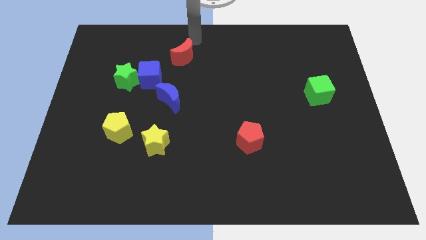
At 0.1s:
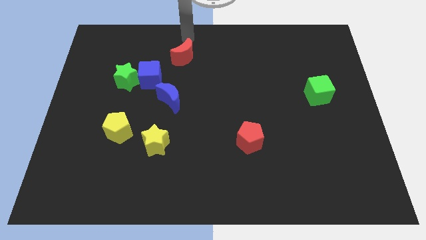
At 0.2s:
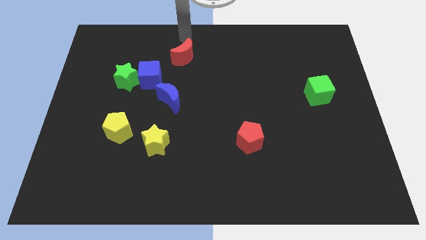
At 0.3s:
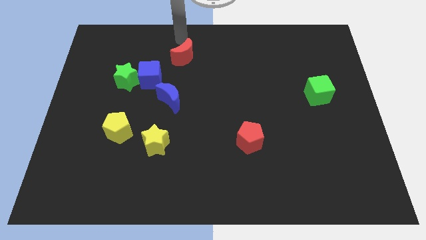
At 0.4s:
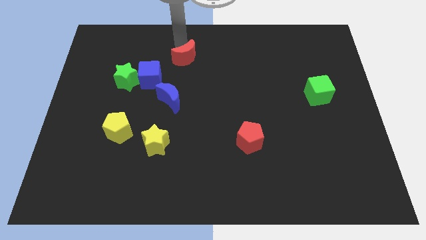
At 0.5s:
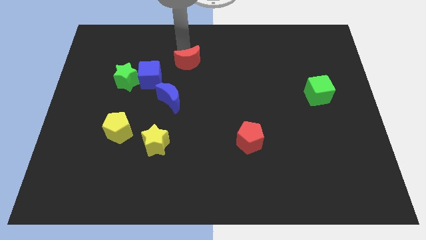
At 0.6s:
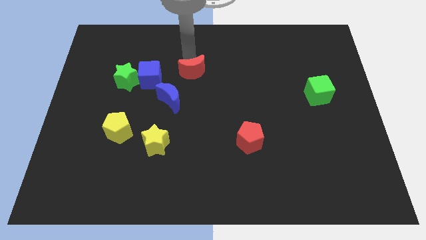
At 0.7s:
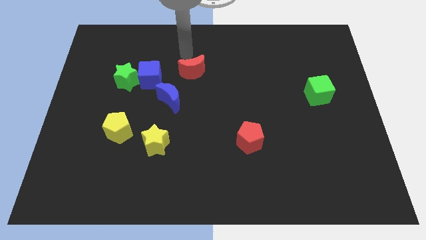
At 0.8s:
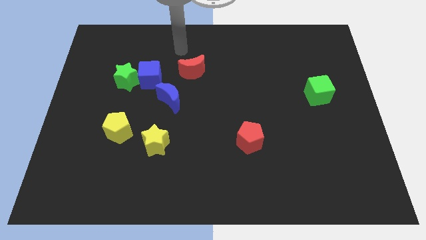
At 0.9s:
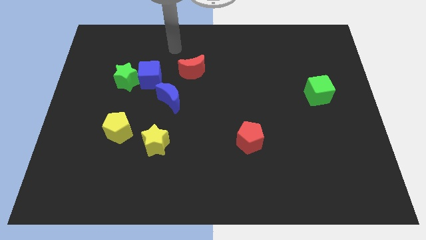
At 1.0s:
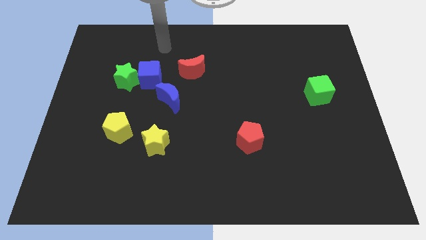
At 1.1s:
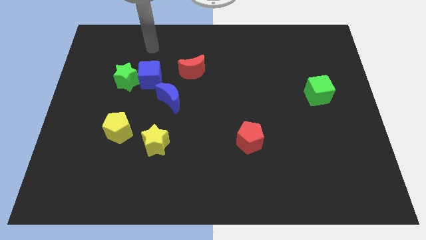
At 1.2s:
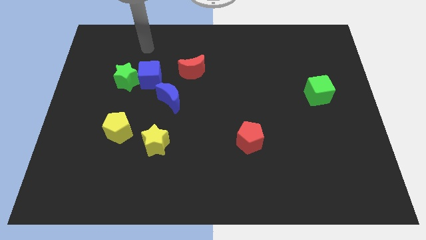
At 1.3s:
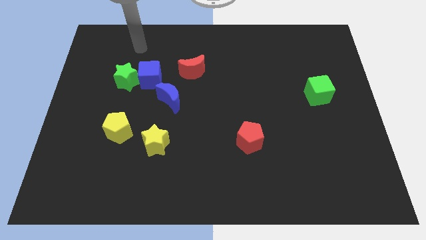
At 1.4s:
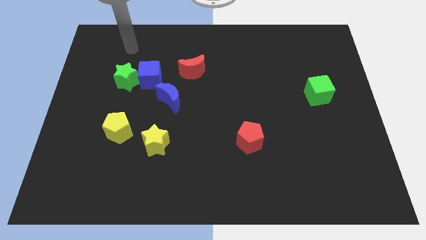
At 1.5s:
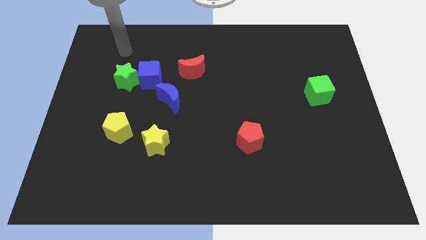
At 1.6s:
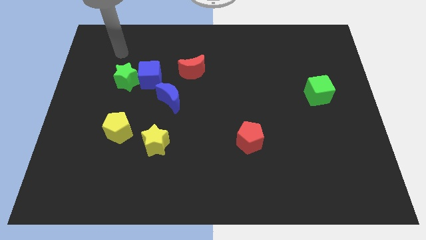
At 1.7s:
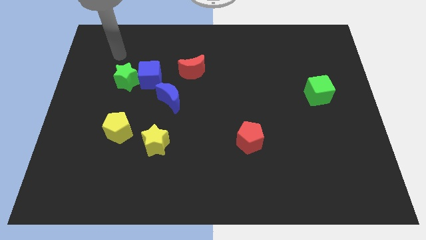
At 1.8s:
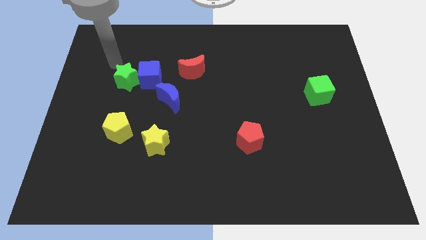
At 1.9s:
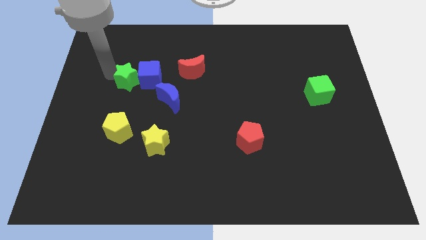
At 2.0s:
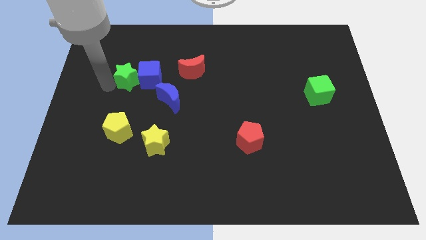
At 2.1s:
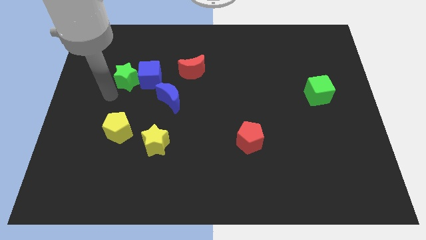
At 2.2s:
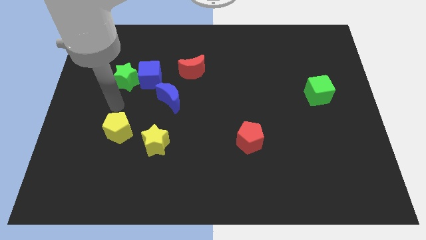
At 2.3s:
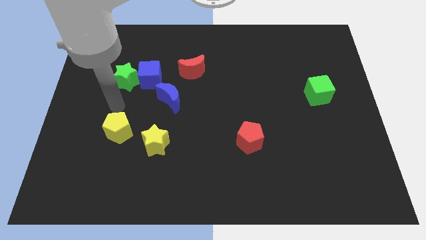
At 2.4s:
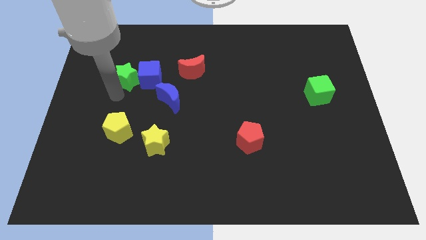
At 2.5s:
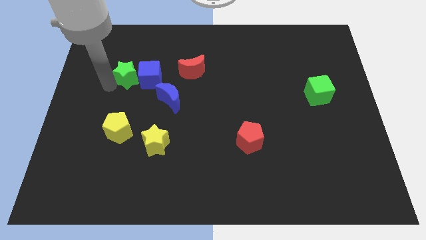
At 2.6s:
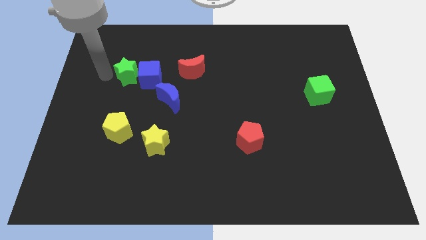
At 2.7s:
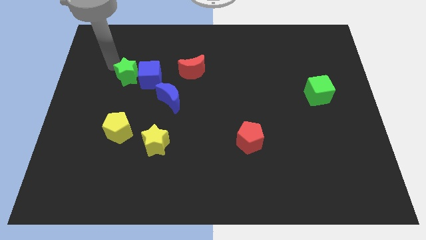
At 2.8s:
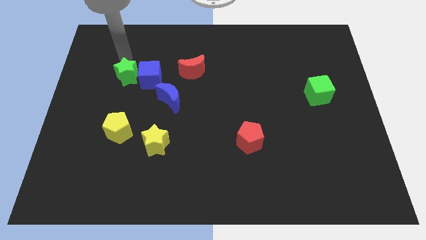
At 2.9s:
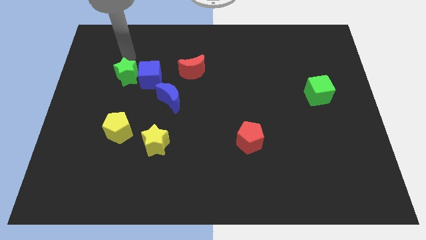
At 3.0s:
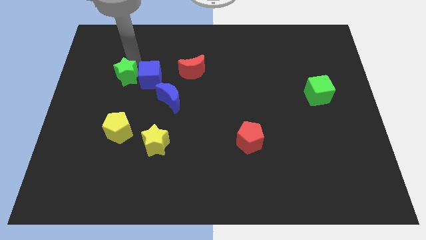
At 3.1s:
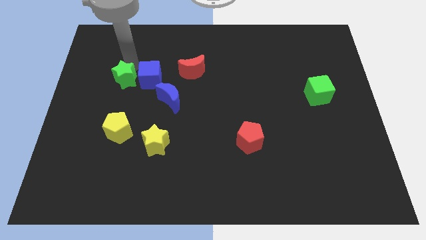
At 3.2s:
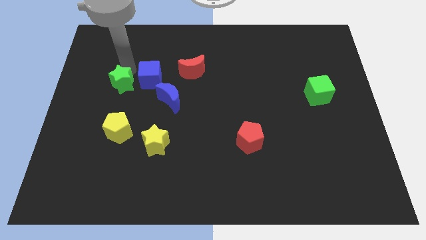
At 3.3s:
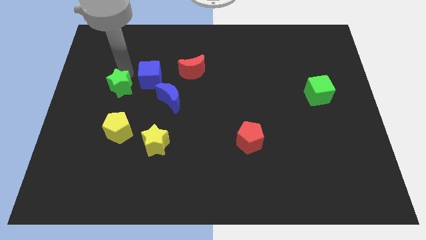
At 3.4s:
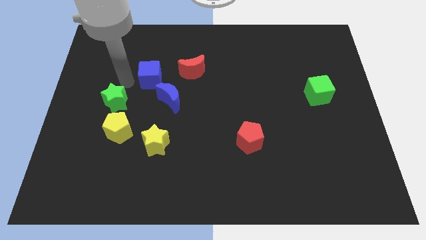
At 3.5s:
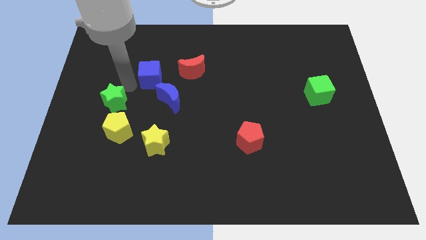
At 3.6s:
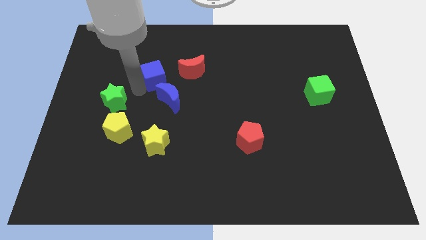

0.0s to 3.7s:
push the green star closer to the yellow pentagon

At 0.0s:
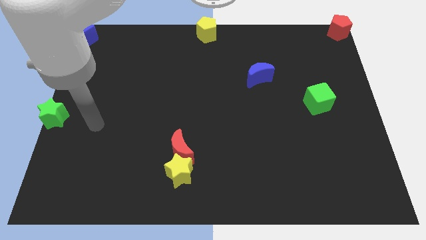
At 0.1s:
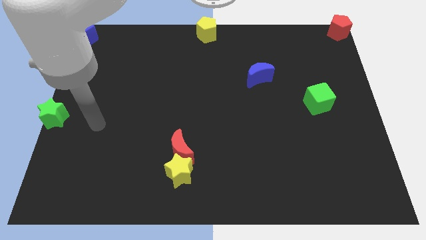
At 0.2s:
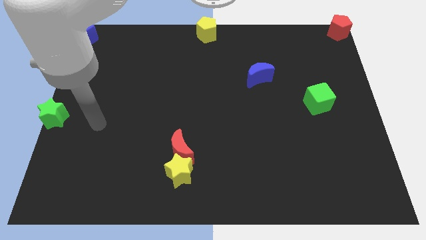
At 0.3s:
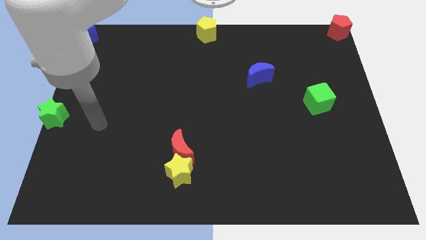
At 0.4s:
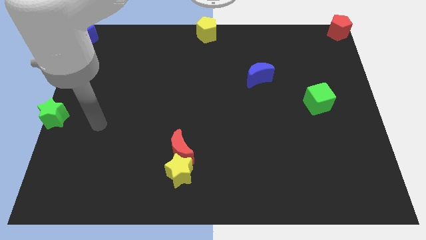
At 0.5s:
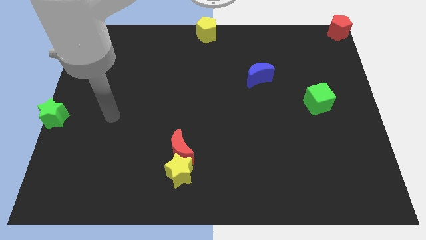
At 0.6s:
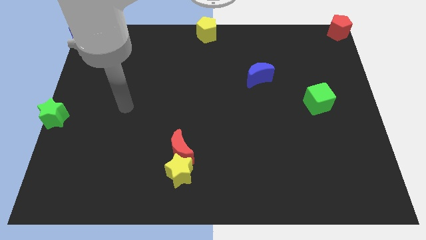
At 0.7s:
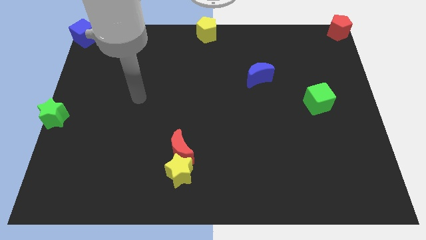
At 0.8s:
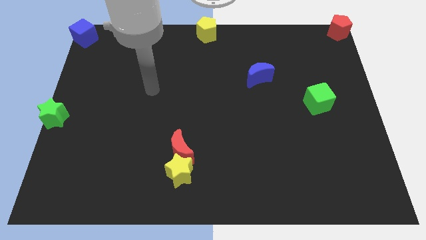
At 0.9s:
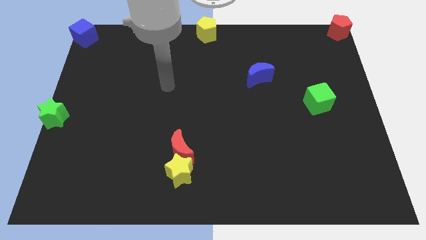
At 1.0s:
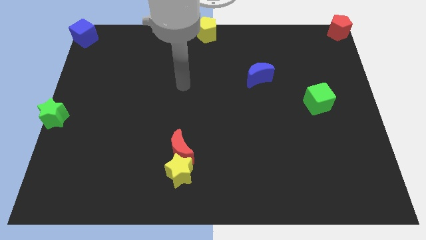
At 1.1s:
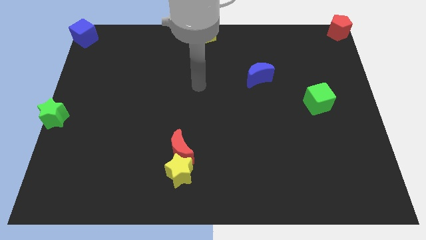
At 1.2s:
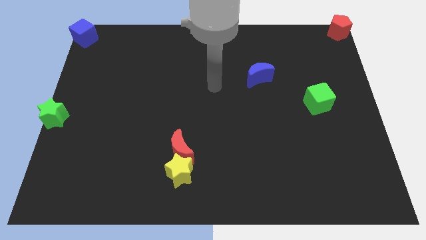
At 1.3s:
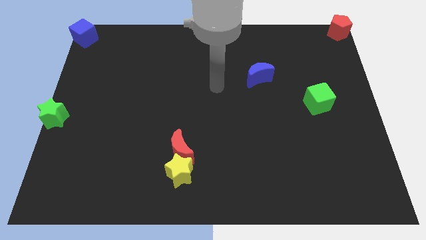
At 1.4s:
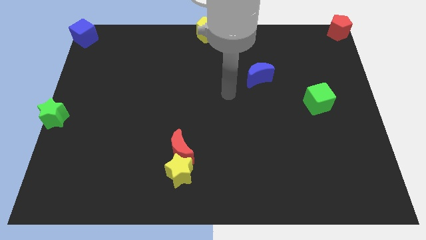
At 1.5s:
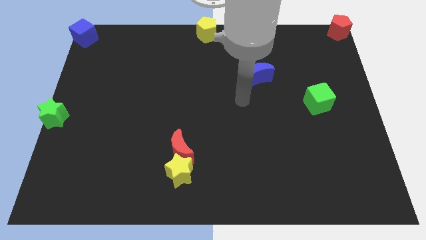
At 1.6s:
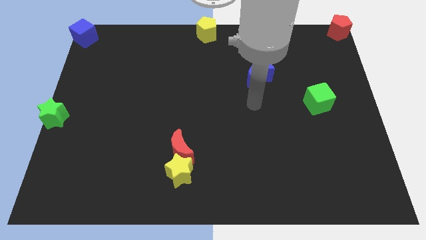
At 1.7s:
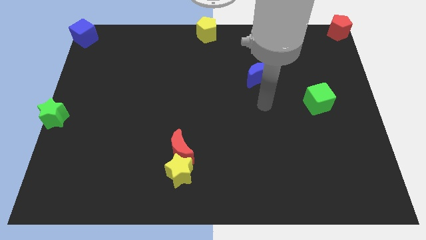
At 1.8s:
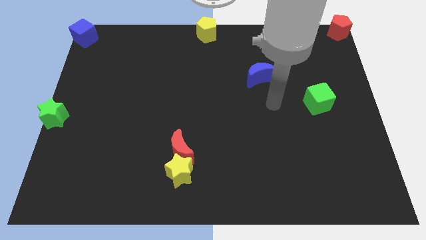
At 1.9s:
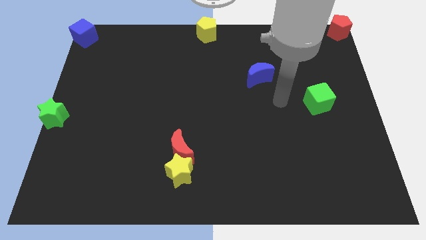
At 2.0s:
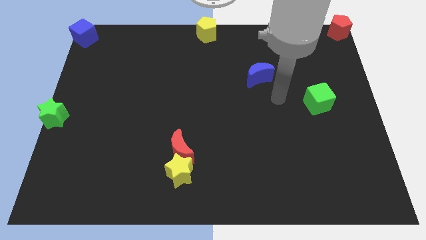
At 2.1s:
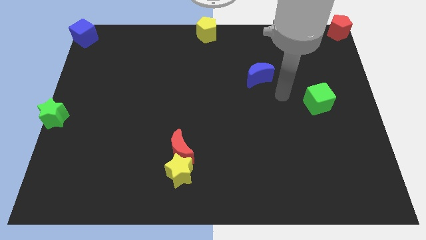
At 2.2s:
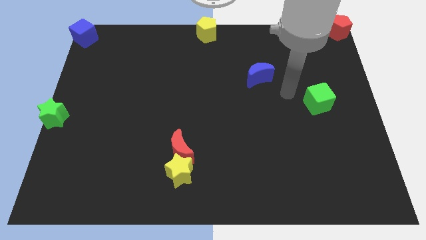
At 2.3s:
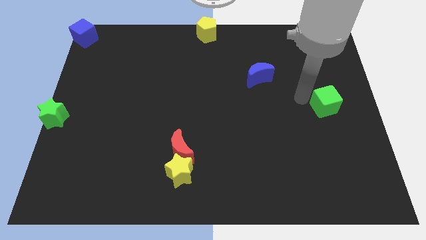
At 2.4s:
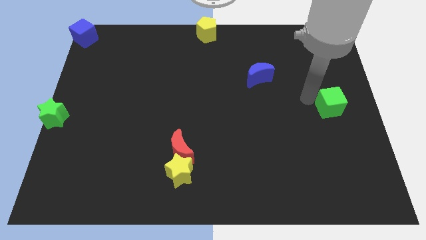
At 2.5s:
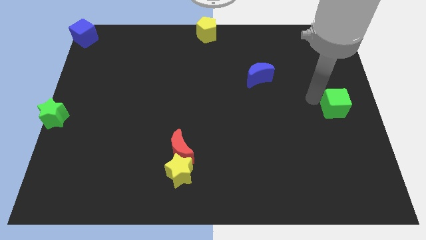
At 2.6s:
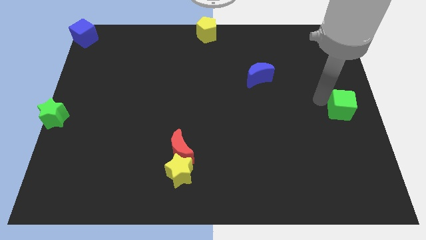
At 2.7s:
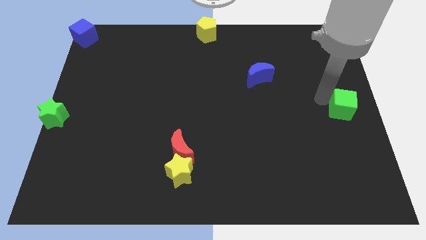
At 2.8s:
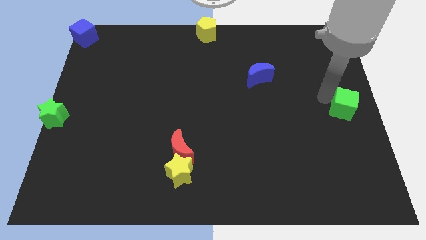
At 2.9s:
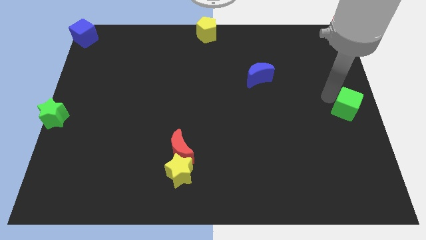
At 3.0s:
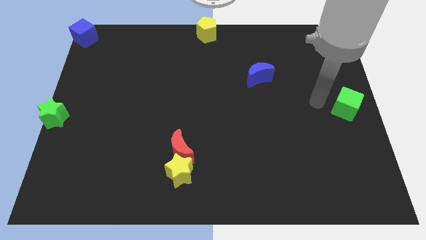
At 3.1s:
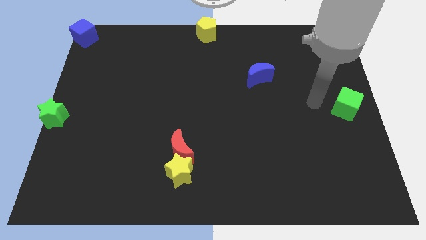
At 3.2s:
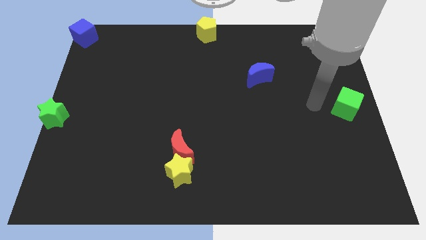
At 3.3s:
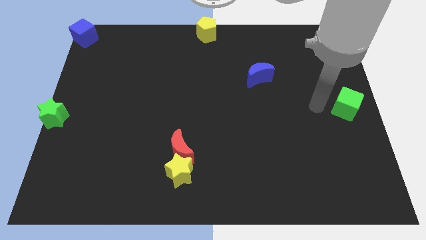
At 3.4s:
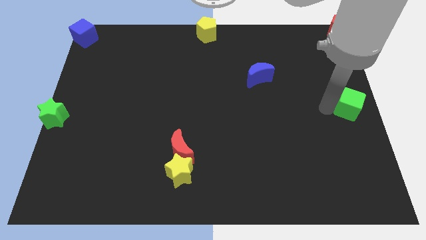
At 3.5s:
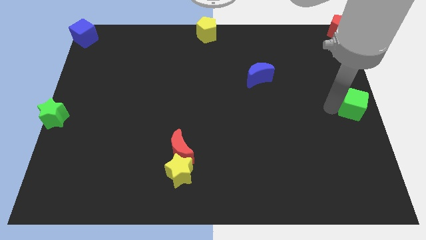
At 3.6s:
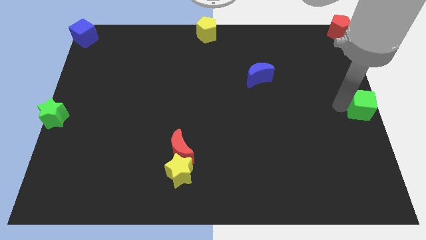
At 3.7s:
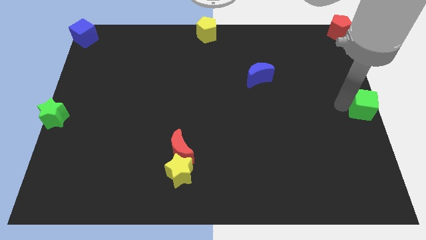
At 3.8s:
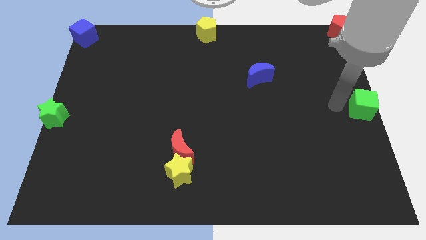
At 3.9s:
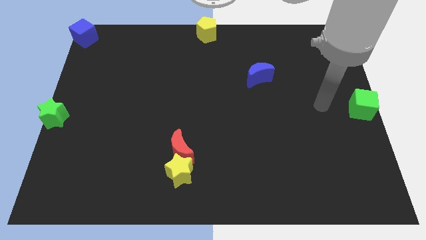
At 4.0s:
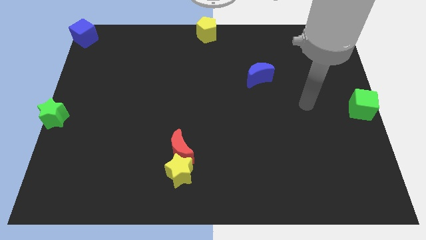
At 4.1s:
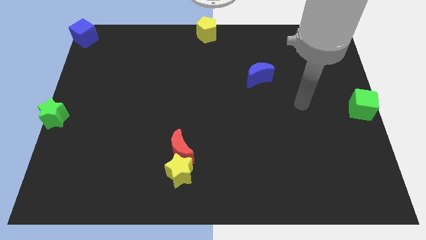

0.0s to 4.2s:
move the green cube vertically at the bottom side of the red pentagon

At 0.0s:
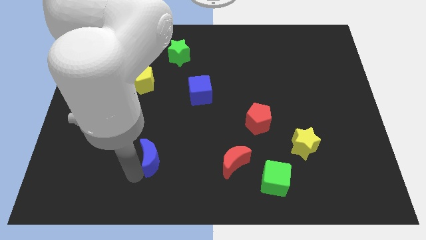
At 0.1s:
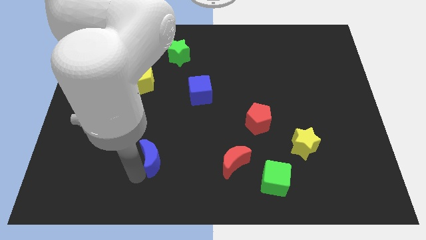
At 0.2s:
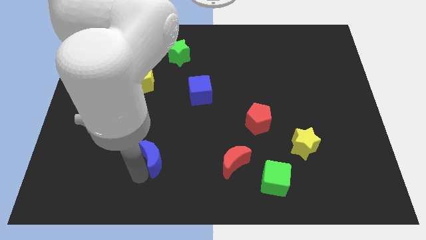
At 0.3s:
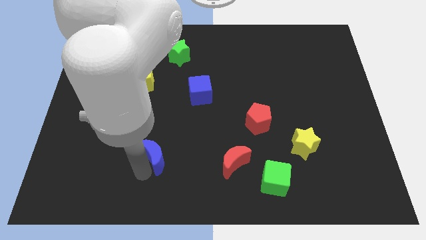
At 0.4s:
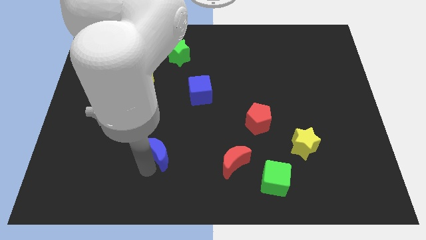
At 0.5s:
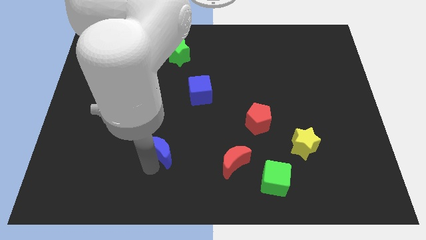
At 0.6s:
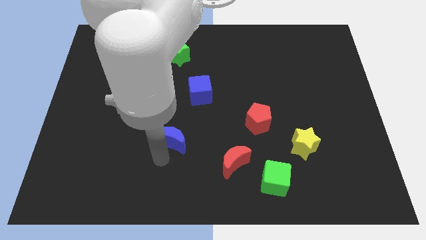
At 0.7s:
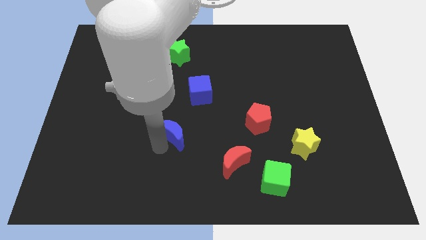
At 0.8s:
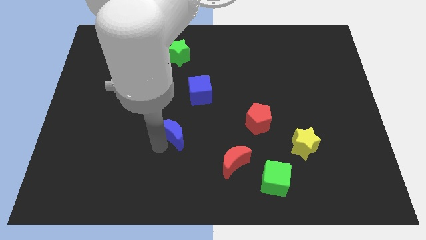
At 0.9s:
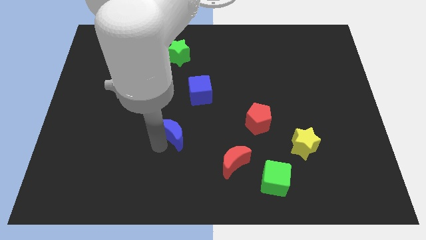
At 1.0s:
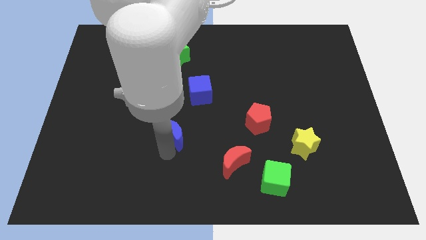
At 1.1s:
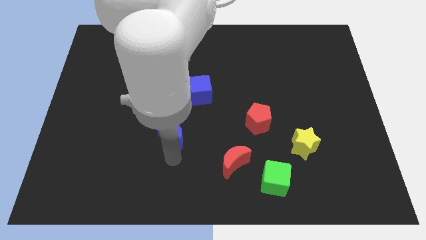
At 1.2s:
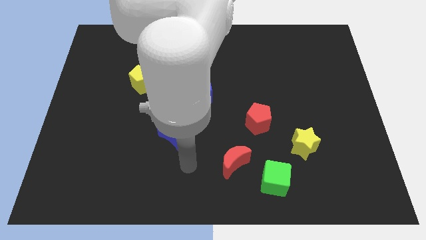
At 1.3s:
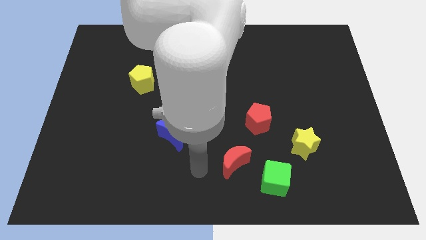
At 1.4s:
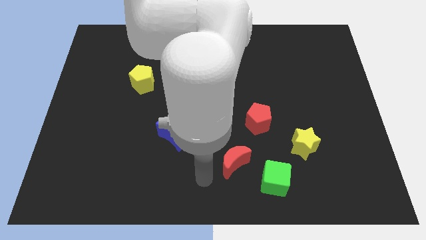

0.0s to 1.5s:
slide the blue crescent diagonally bottom right to the yellow pentagon
